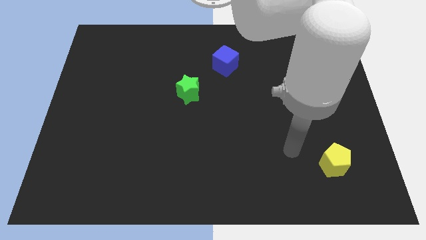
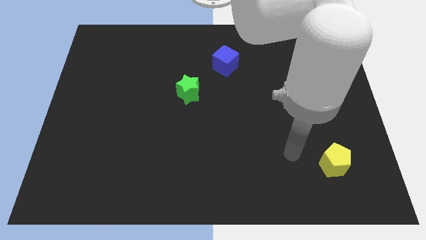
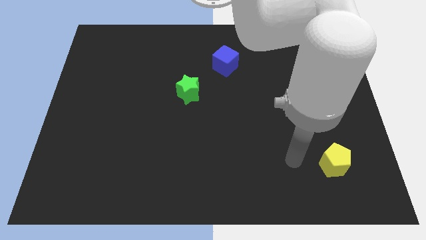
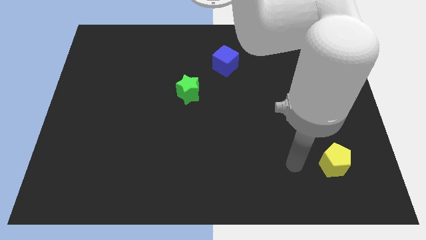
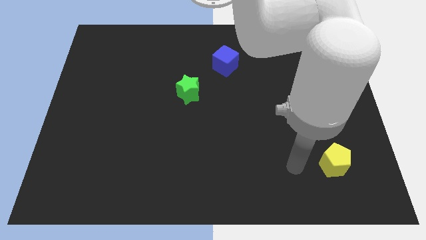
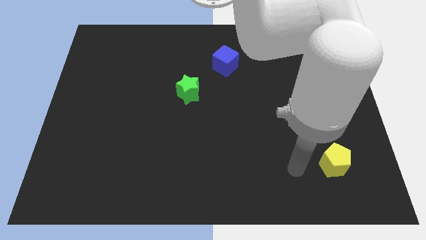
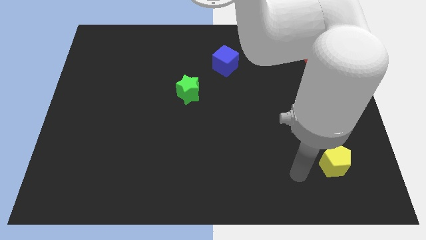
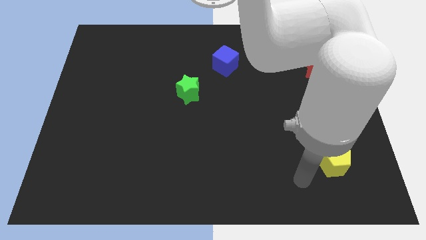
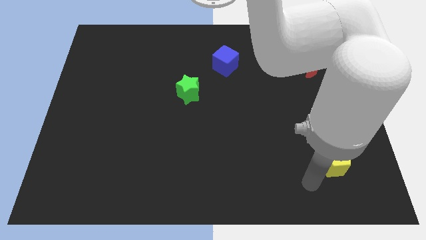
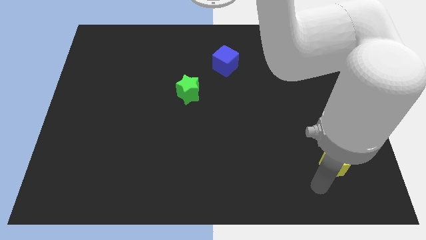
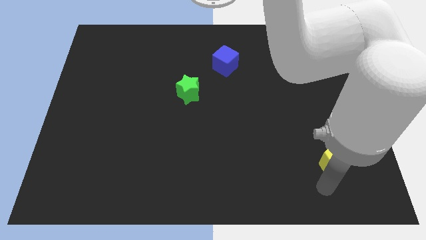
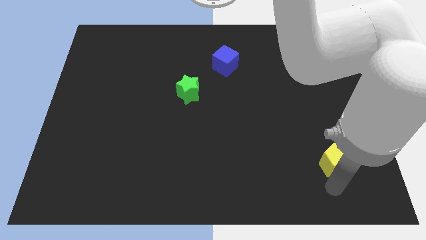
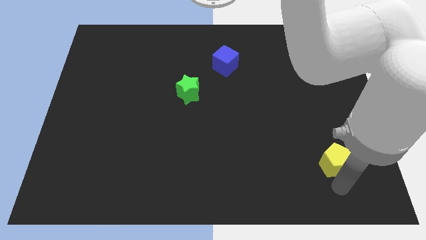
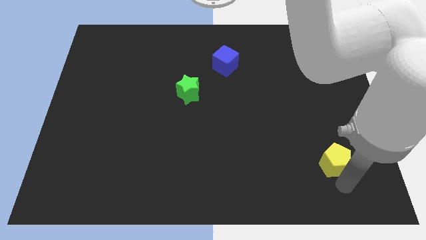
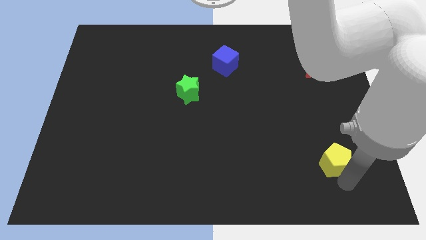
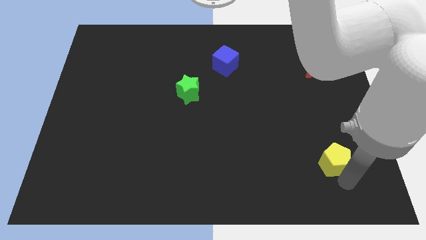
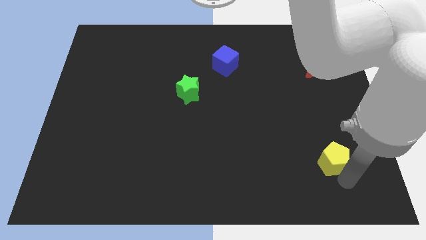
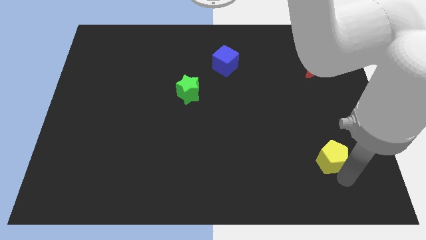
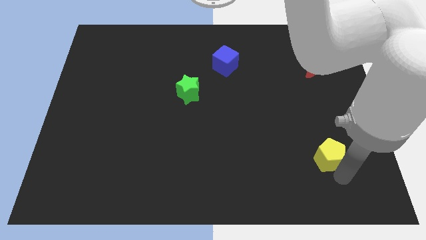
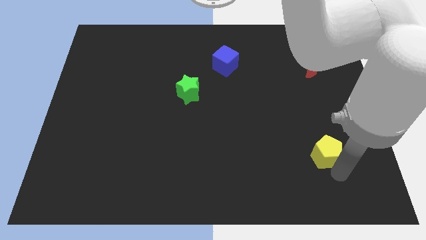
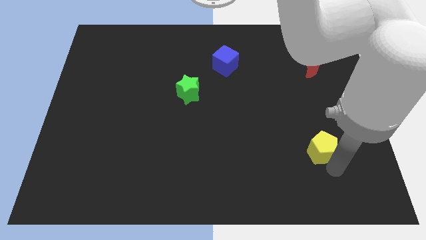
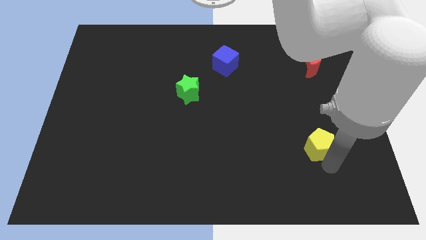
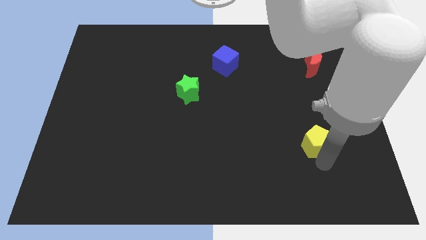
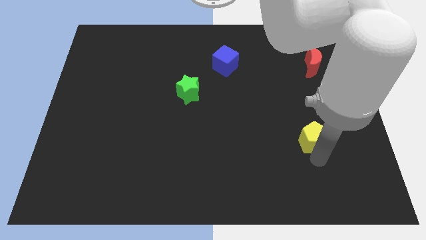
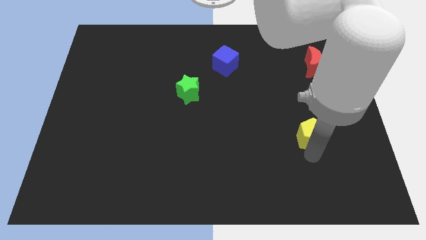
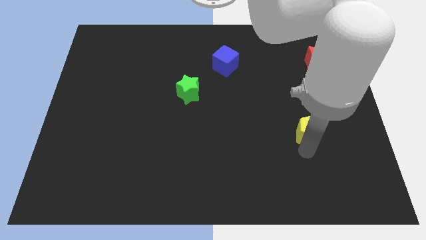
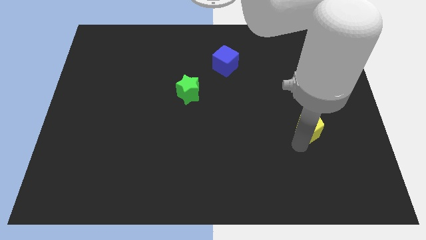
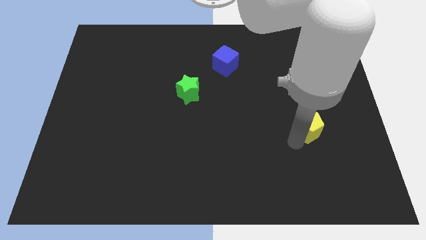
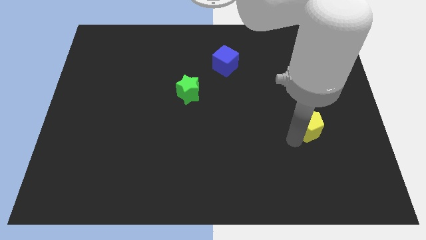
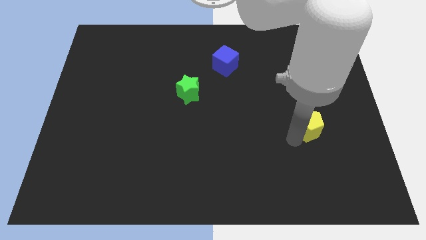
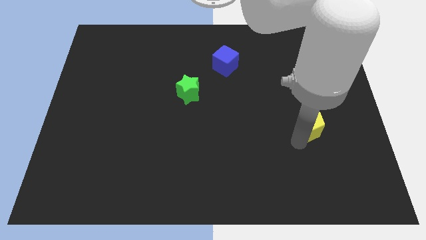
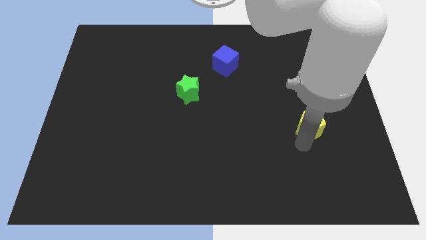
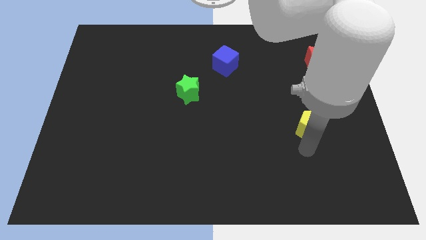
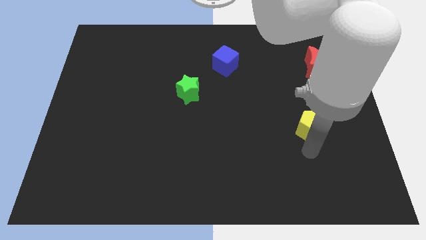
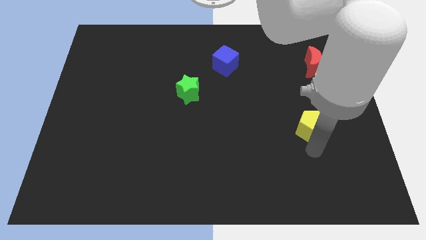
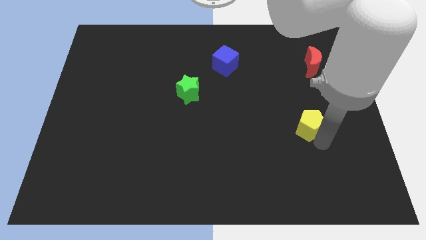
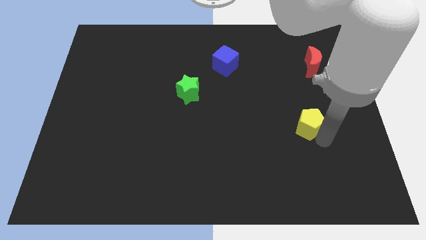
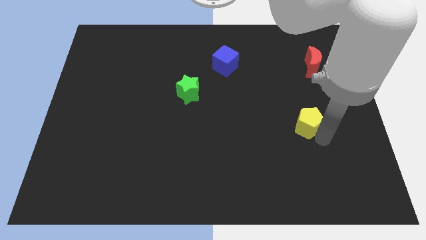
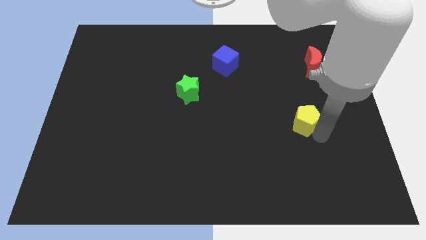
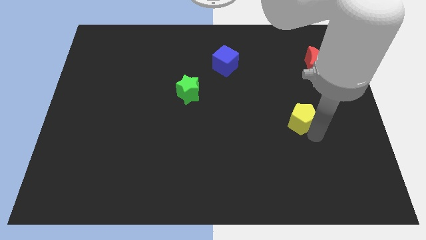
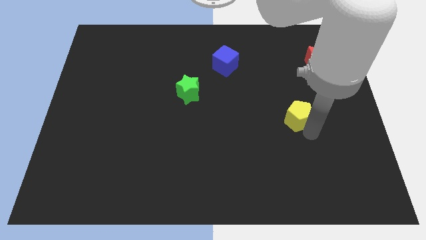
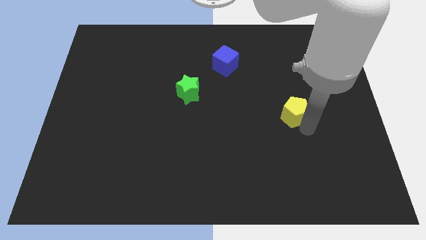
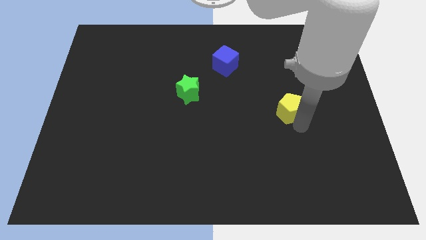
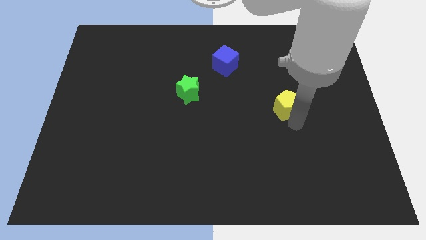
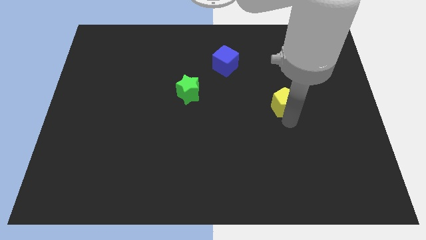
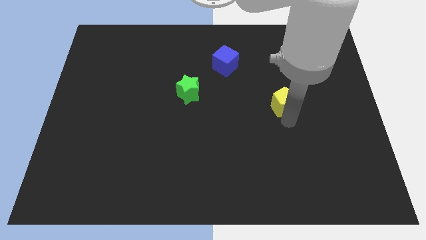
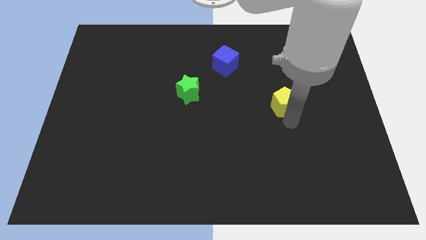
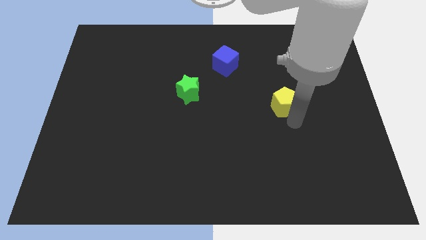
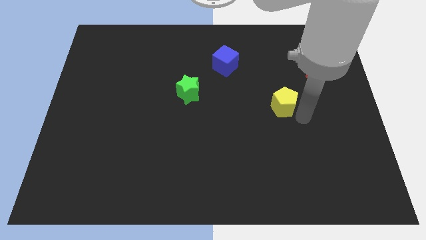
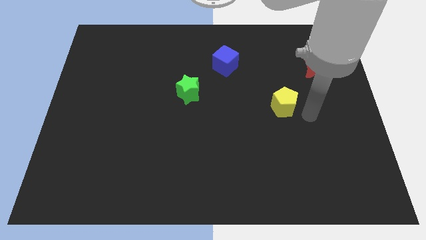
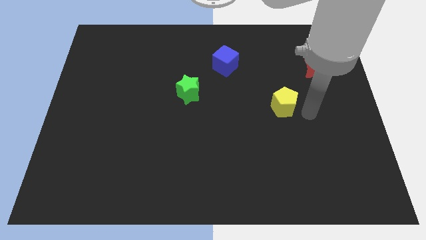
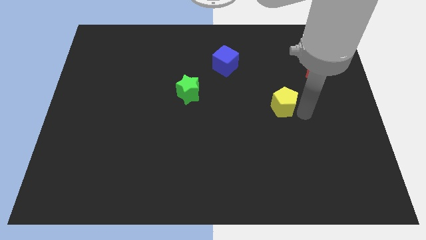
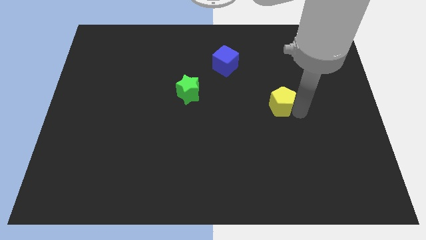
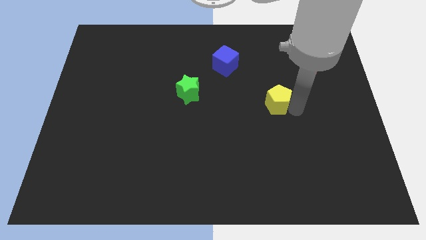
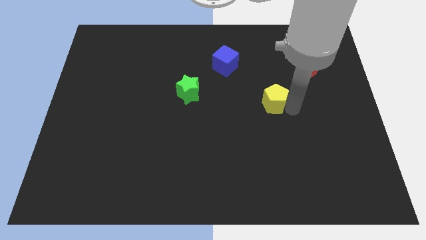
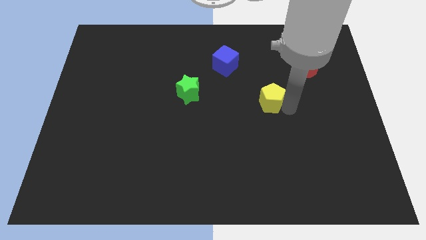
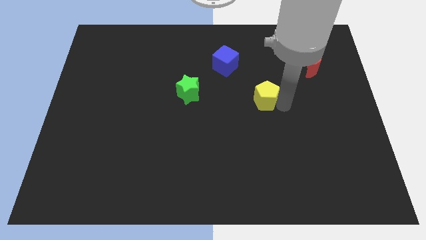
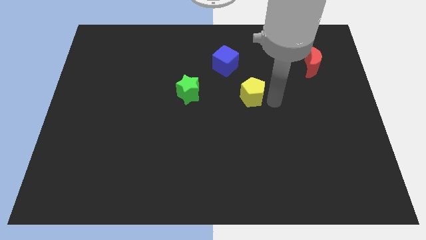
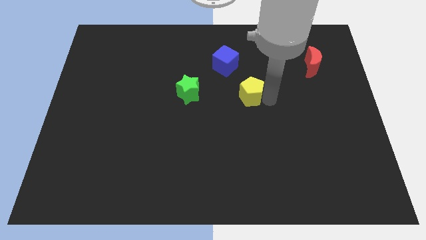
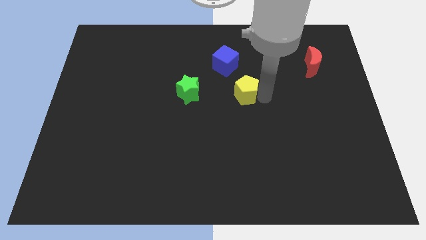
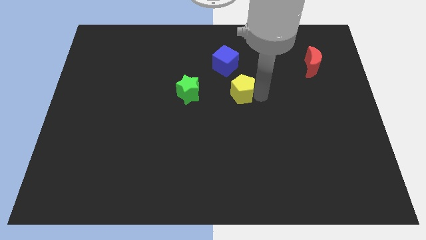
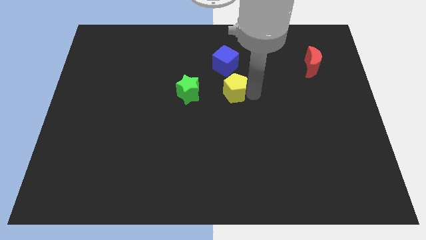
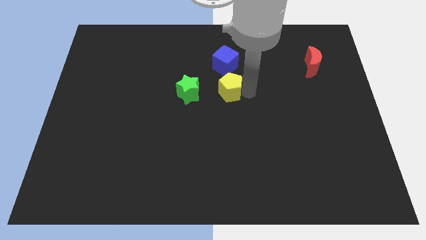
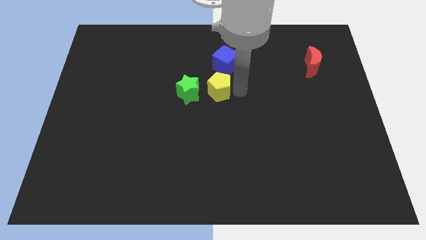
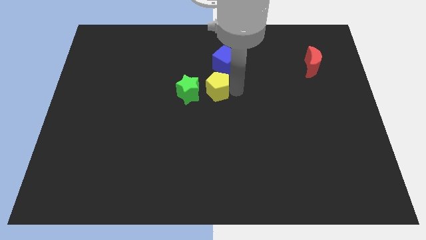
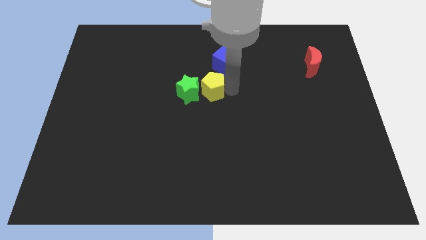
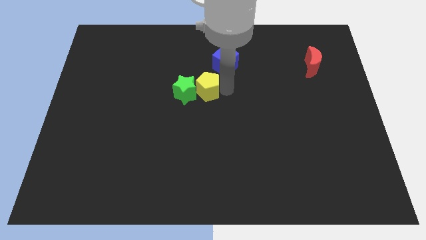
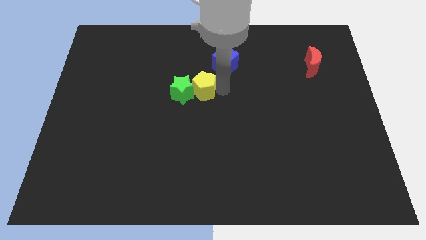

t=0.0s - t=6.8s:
push the yellow pentagon towards the green block

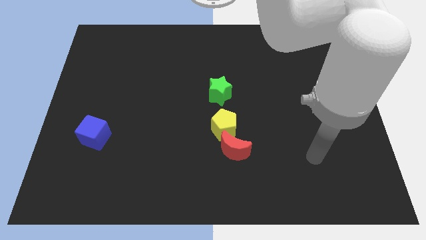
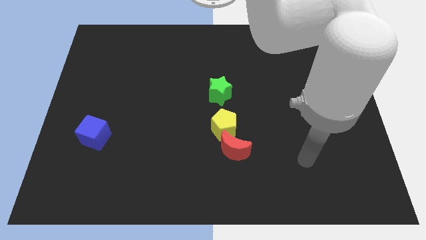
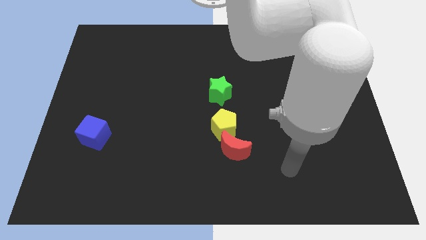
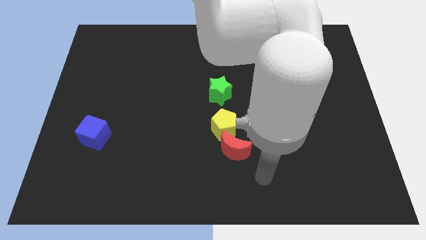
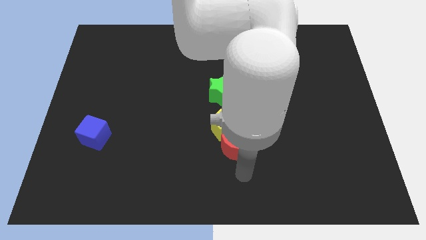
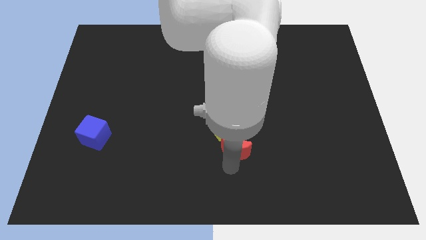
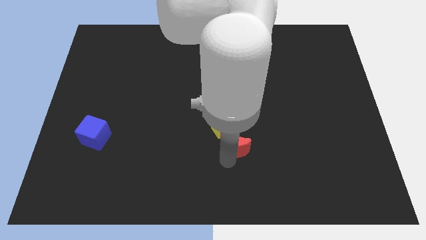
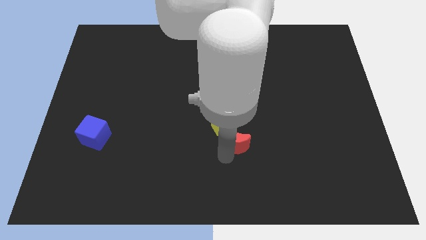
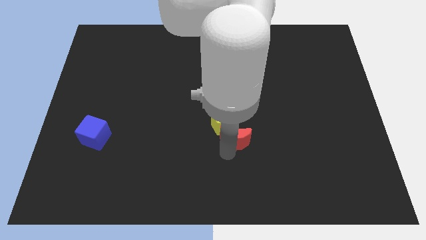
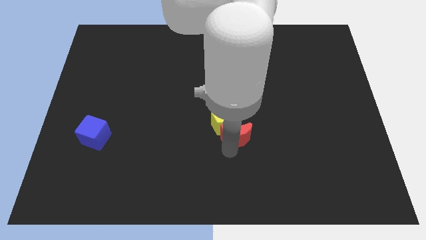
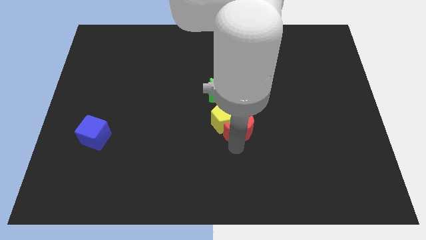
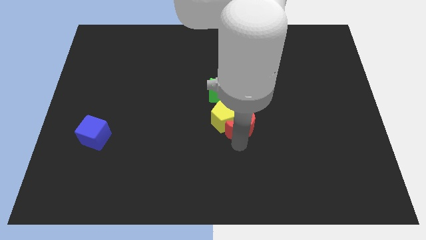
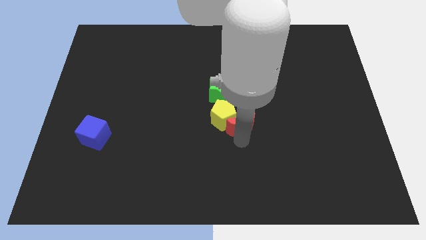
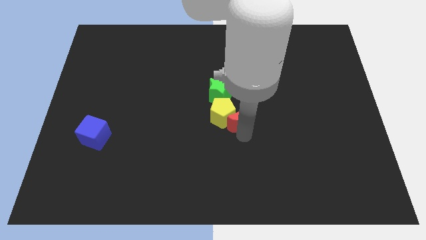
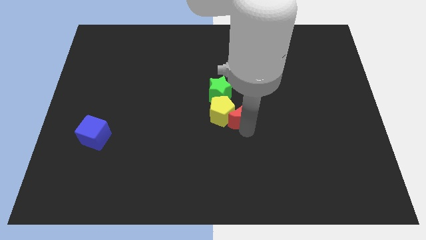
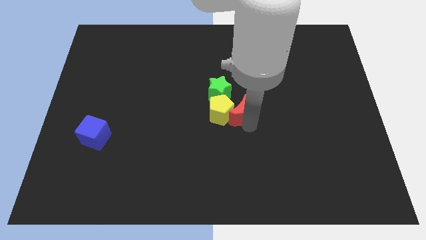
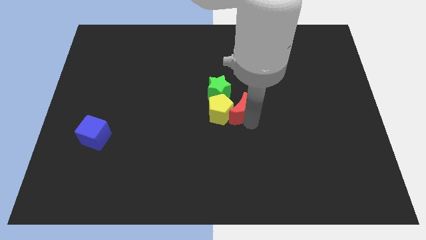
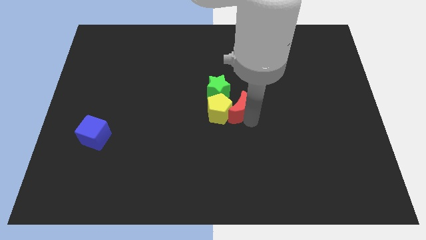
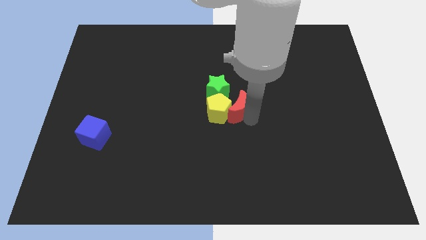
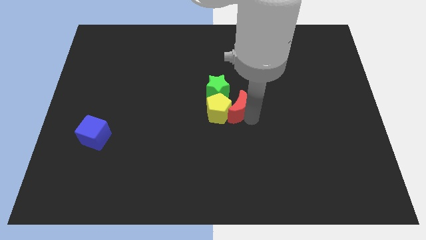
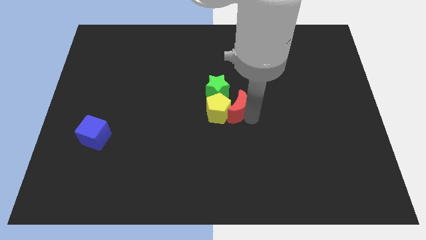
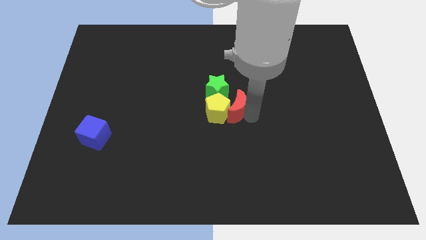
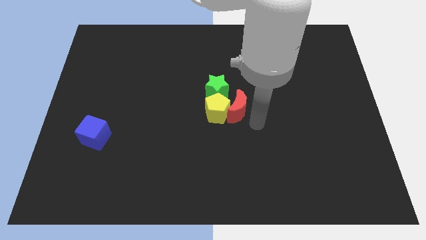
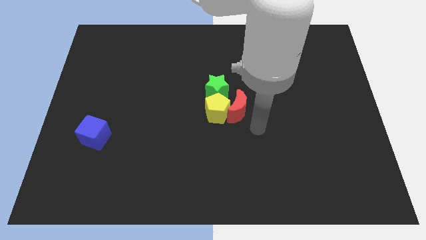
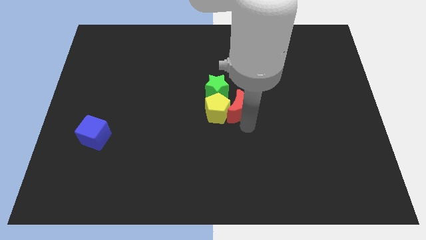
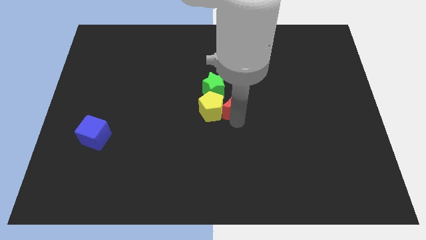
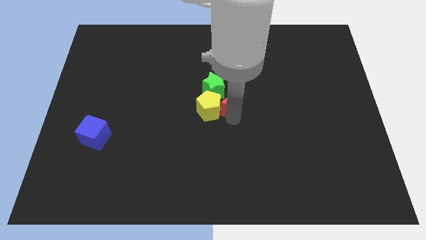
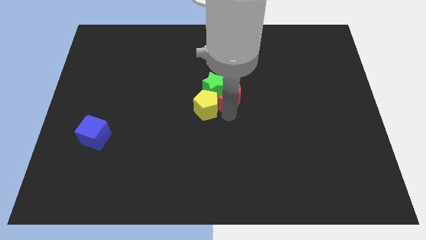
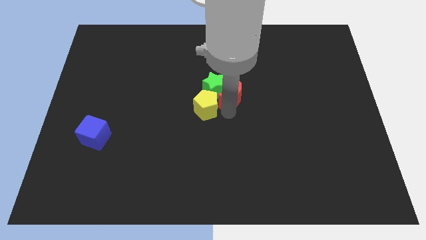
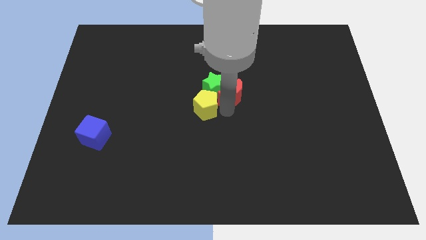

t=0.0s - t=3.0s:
push the moon close to the green star
